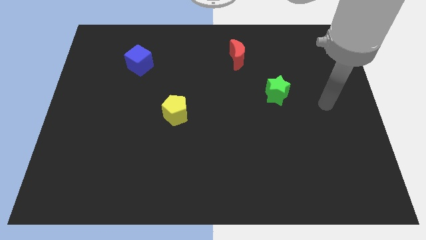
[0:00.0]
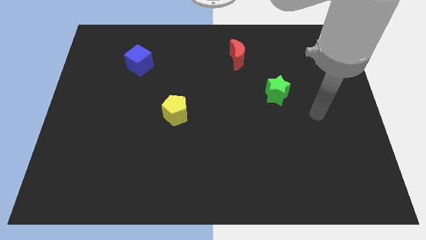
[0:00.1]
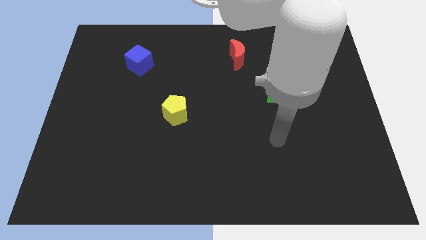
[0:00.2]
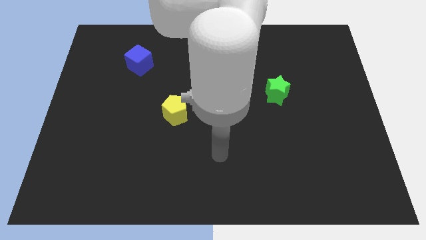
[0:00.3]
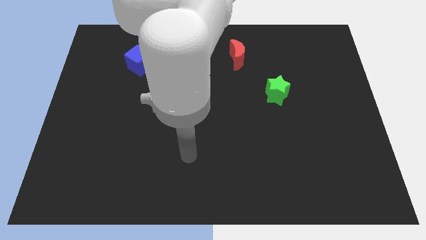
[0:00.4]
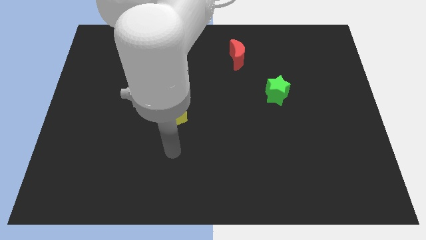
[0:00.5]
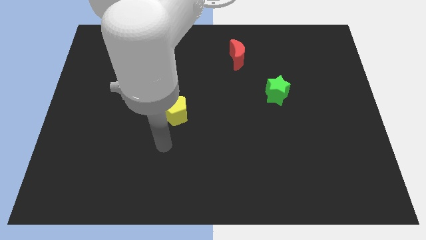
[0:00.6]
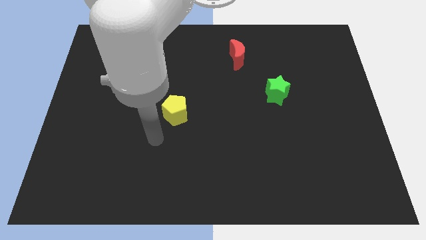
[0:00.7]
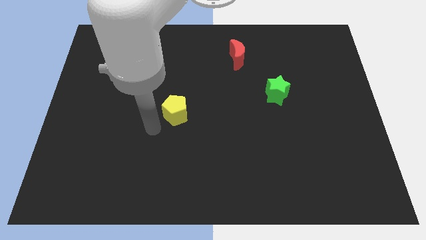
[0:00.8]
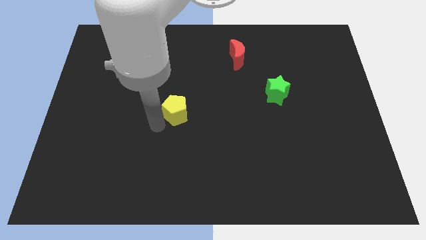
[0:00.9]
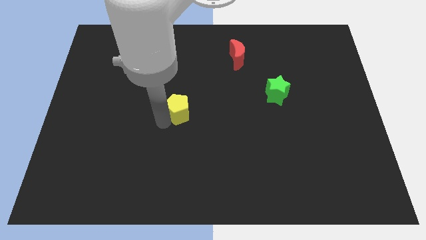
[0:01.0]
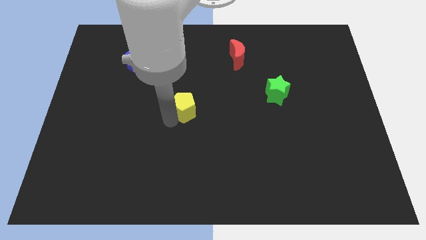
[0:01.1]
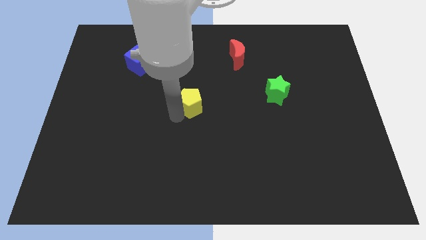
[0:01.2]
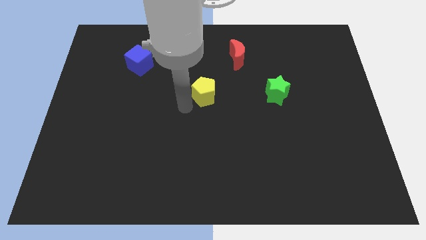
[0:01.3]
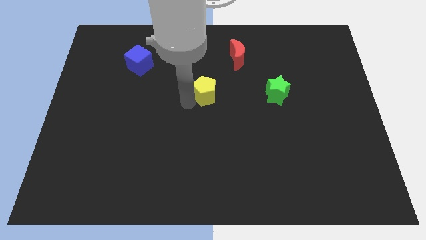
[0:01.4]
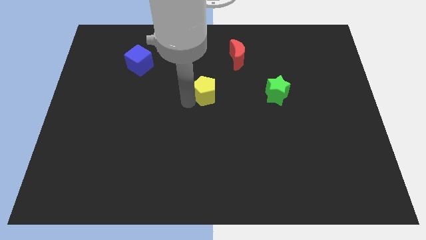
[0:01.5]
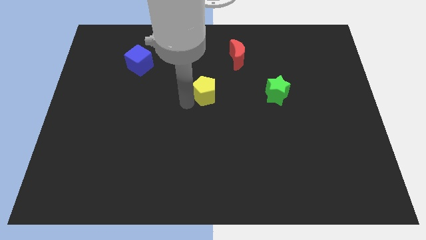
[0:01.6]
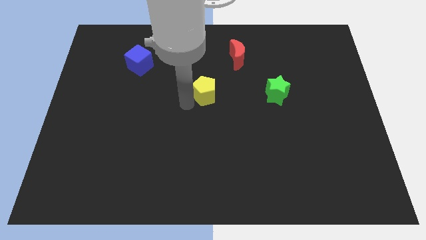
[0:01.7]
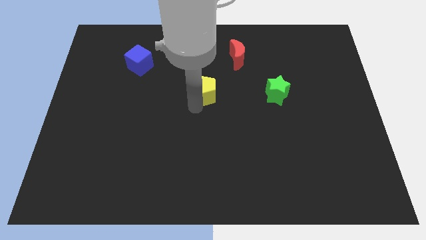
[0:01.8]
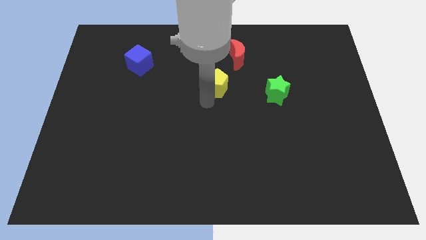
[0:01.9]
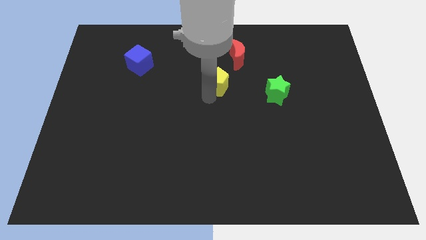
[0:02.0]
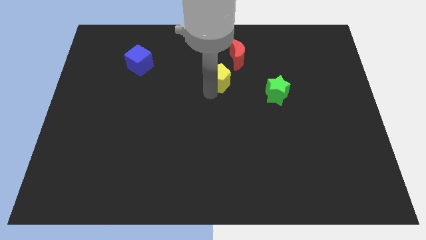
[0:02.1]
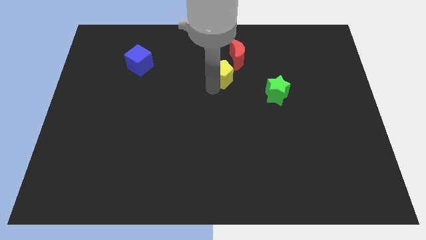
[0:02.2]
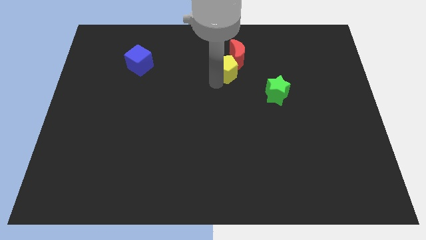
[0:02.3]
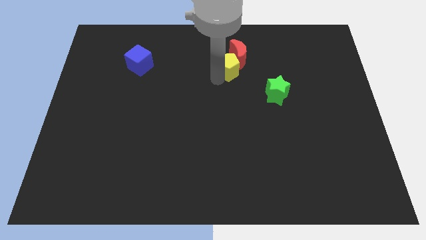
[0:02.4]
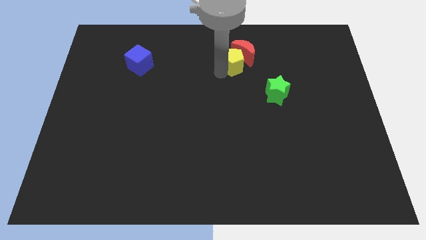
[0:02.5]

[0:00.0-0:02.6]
move the yellow block to the red moon

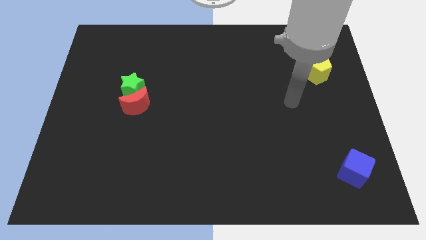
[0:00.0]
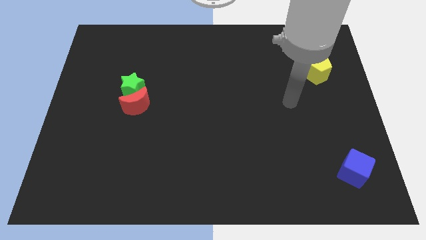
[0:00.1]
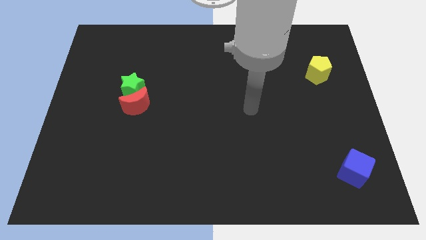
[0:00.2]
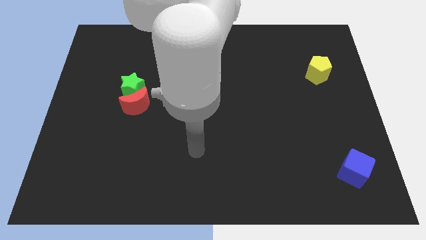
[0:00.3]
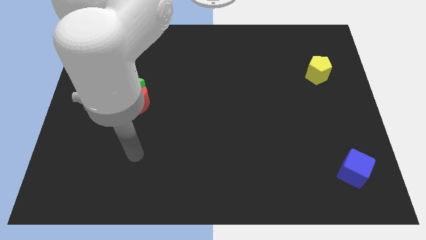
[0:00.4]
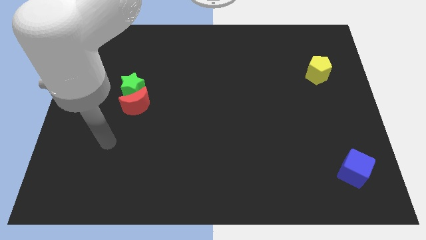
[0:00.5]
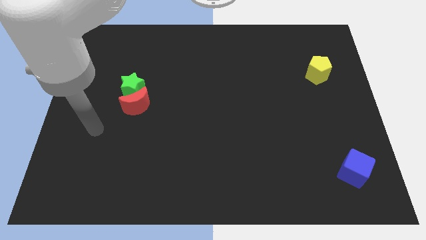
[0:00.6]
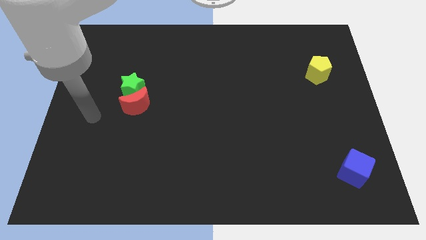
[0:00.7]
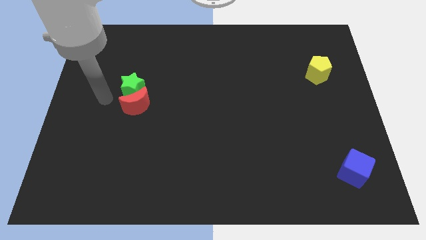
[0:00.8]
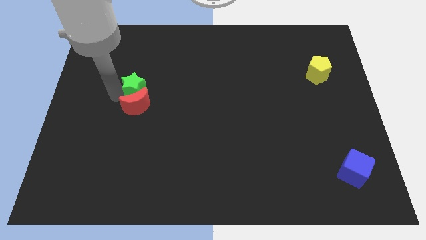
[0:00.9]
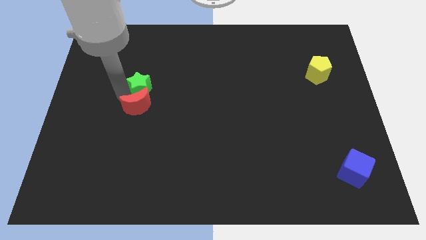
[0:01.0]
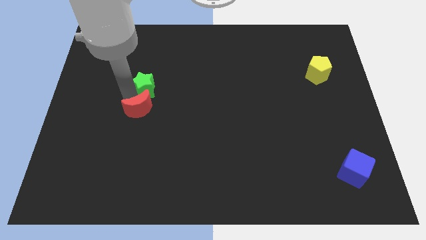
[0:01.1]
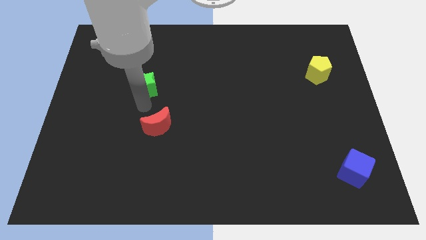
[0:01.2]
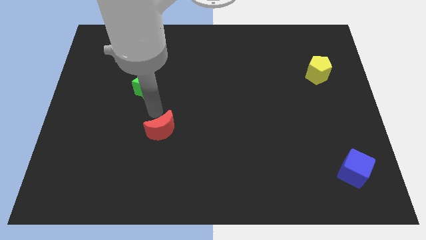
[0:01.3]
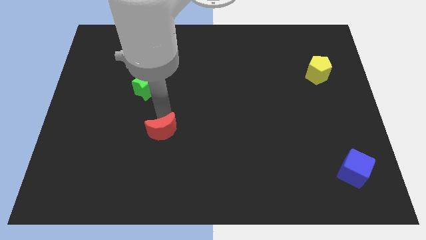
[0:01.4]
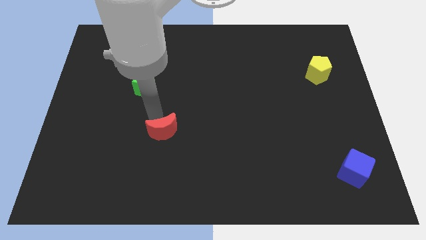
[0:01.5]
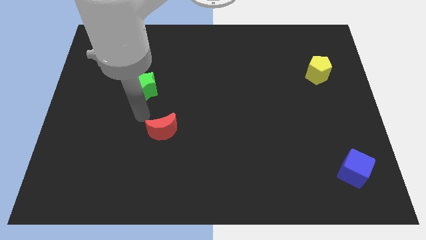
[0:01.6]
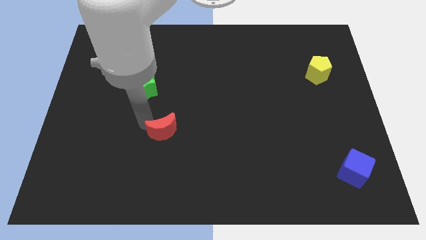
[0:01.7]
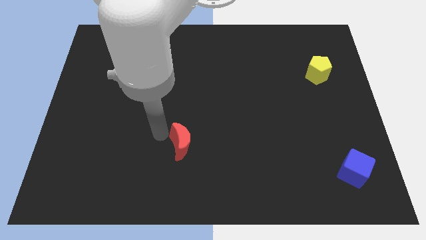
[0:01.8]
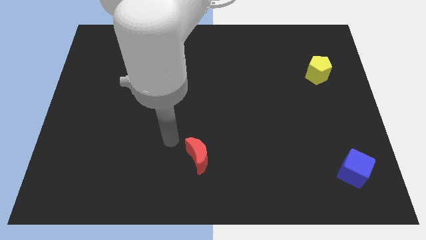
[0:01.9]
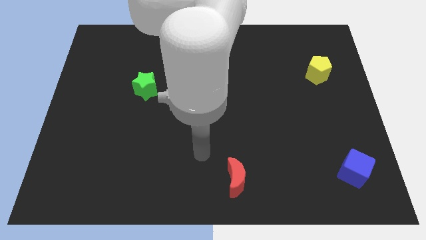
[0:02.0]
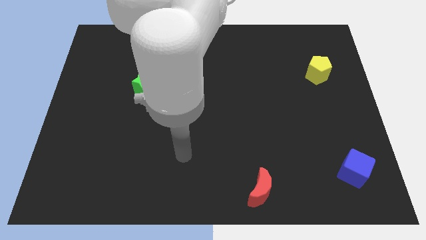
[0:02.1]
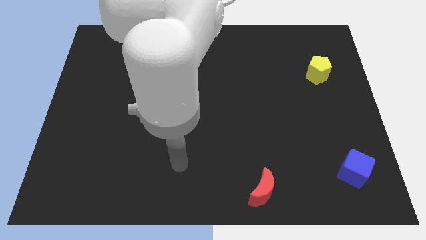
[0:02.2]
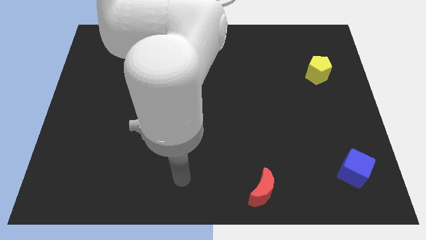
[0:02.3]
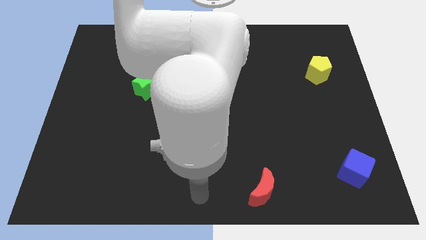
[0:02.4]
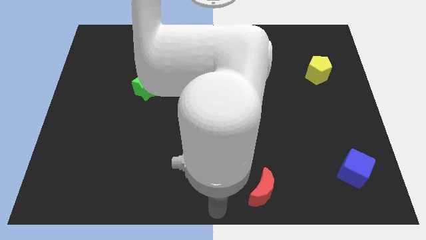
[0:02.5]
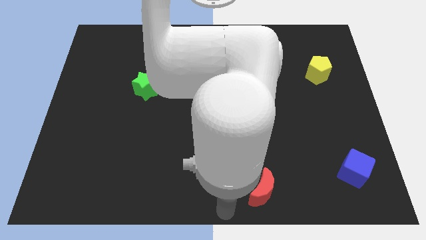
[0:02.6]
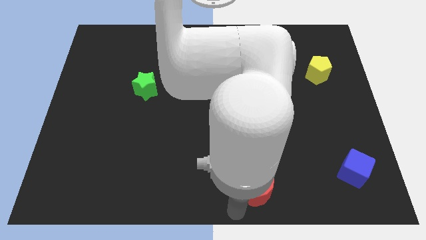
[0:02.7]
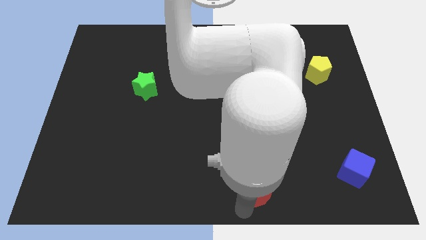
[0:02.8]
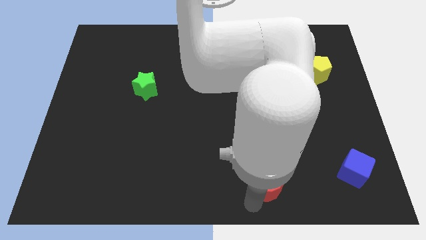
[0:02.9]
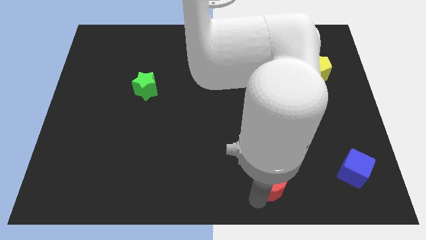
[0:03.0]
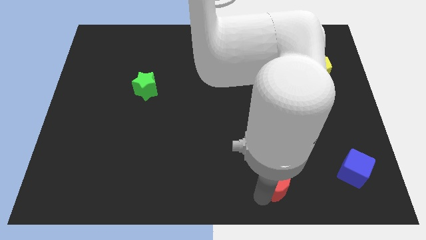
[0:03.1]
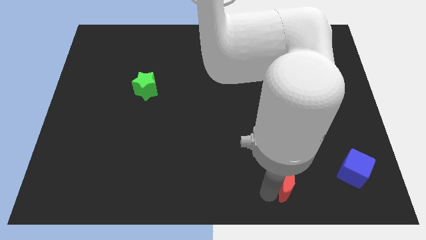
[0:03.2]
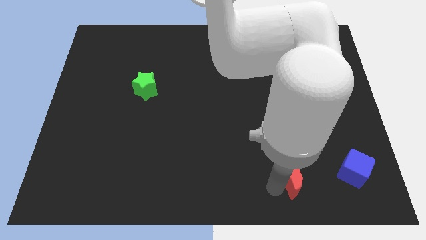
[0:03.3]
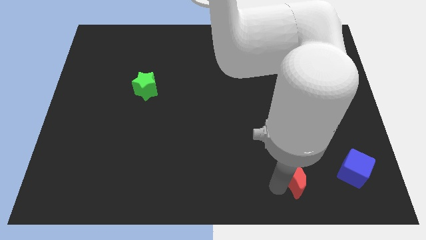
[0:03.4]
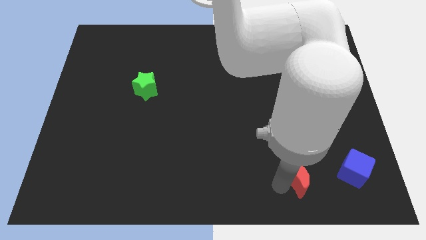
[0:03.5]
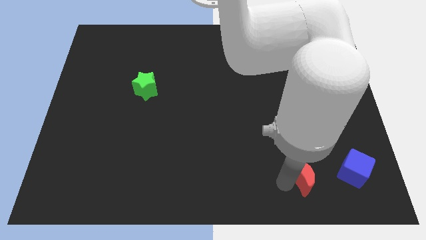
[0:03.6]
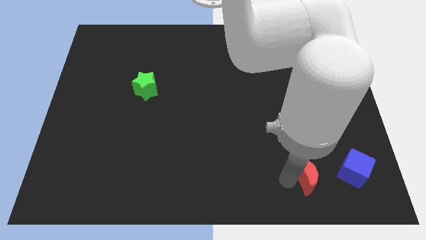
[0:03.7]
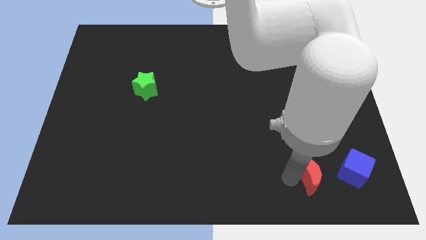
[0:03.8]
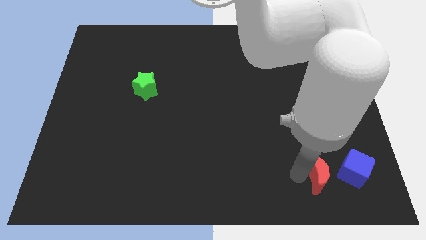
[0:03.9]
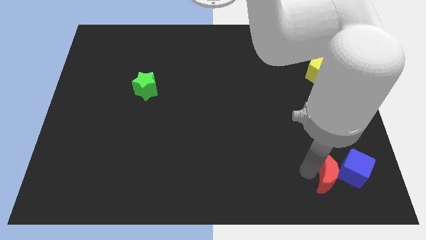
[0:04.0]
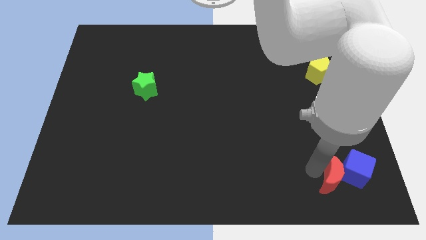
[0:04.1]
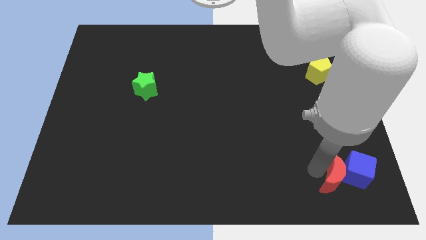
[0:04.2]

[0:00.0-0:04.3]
put the red block next to the blue block

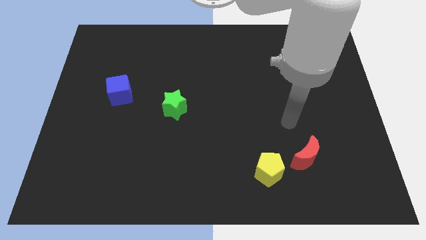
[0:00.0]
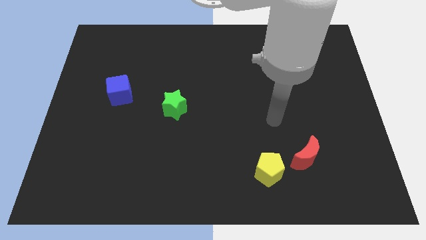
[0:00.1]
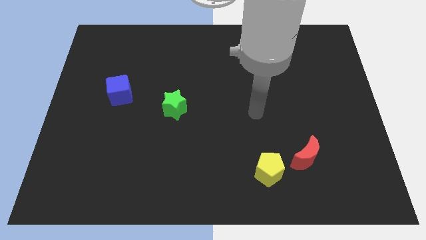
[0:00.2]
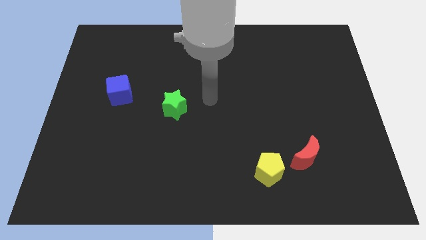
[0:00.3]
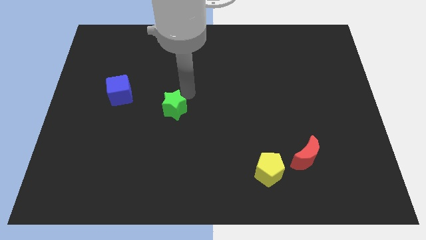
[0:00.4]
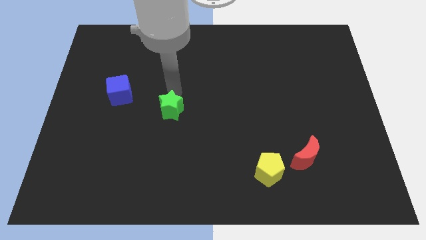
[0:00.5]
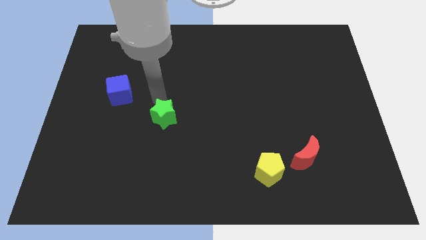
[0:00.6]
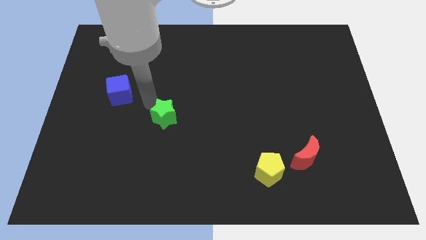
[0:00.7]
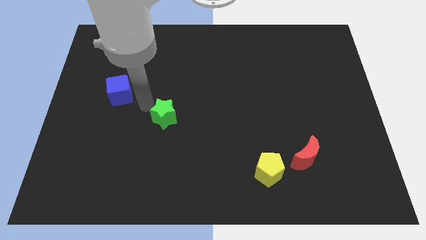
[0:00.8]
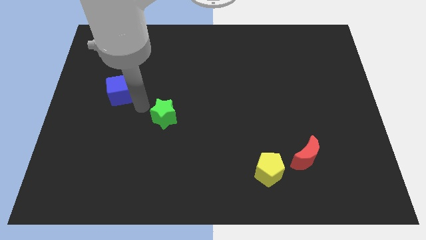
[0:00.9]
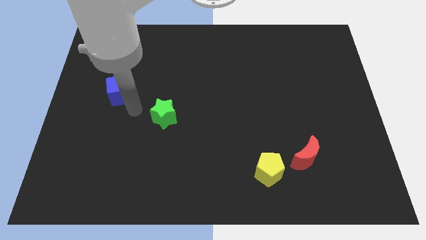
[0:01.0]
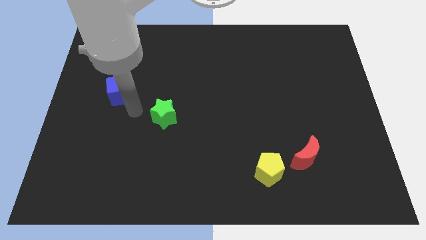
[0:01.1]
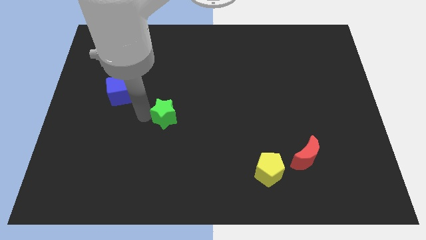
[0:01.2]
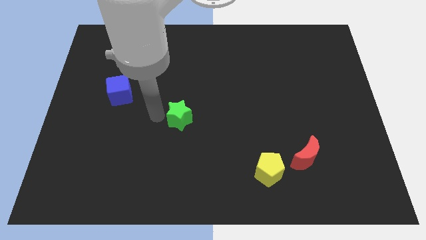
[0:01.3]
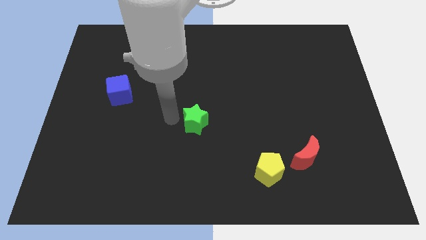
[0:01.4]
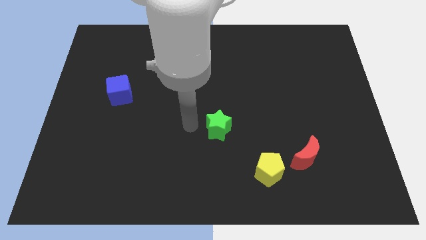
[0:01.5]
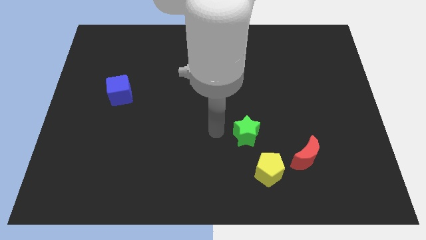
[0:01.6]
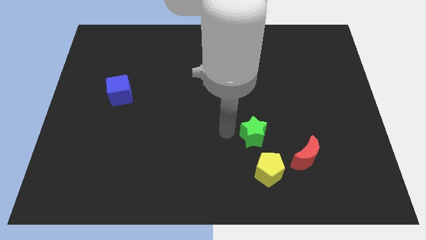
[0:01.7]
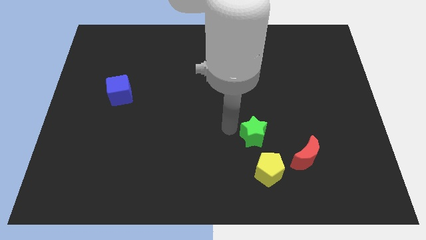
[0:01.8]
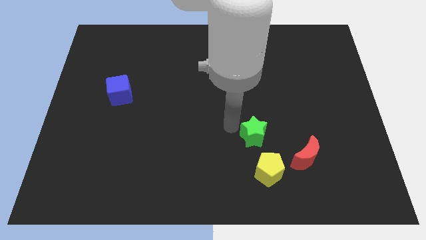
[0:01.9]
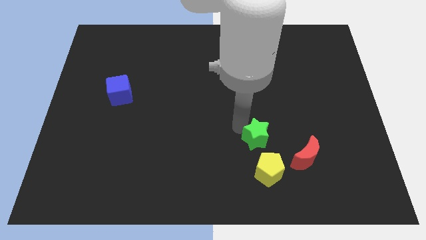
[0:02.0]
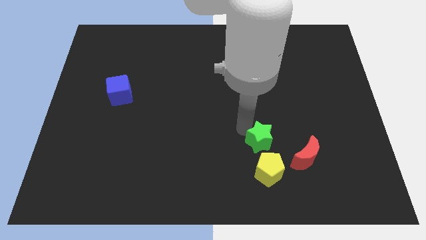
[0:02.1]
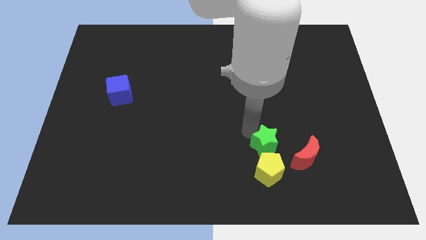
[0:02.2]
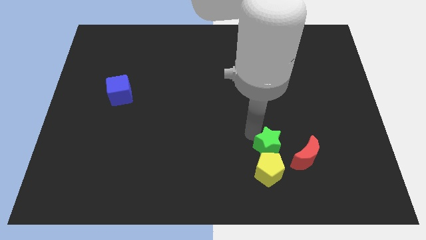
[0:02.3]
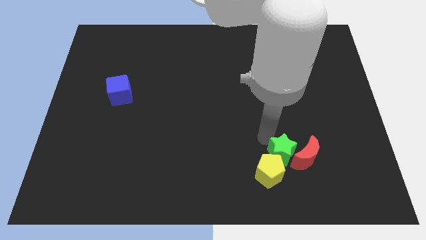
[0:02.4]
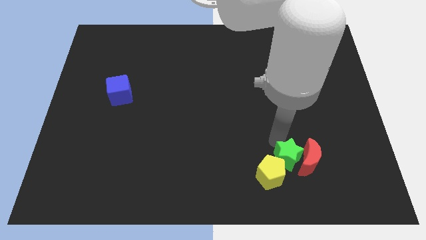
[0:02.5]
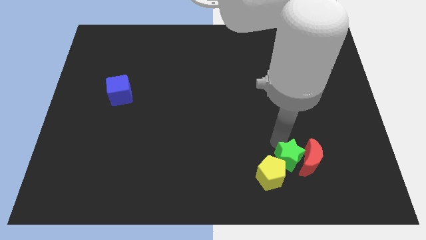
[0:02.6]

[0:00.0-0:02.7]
move the green star close to the moon
